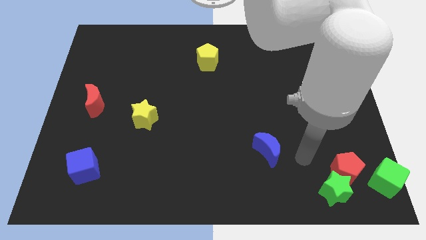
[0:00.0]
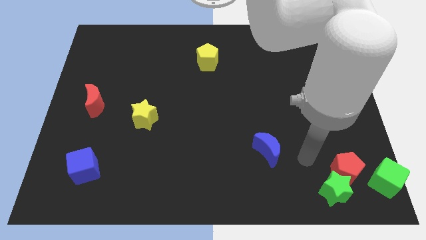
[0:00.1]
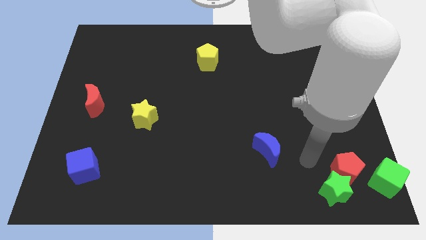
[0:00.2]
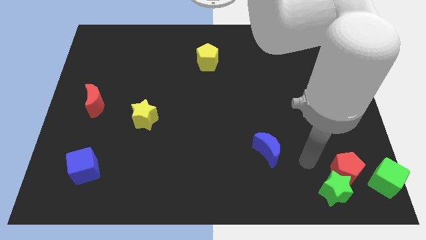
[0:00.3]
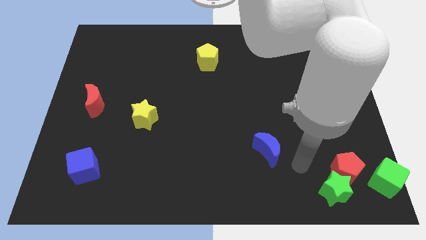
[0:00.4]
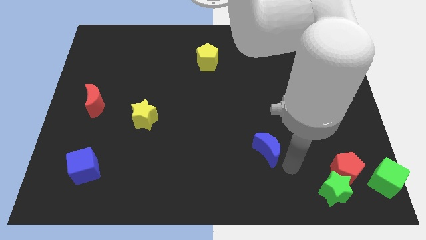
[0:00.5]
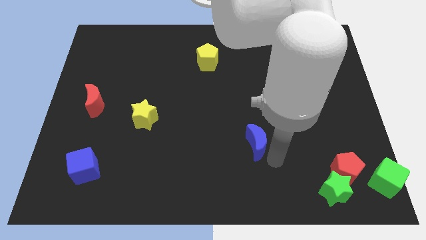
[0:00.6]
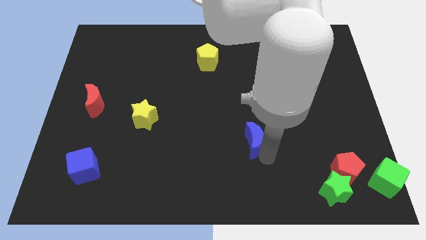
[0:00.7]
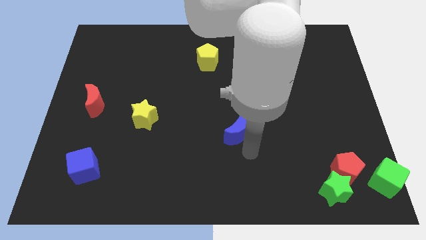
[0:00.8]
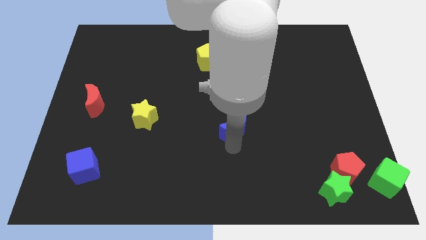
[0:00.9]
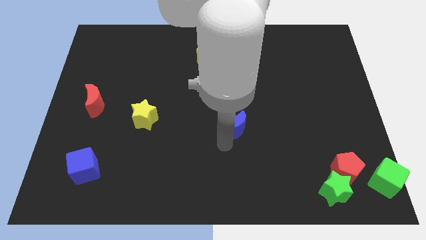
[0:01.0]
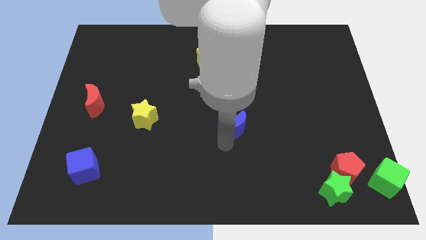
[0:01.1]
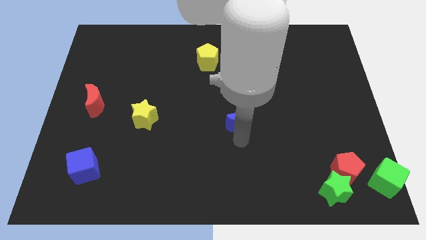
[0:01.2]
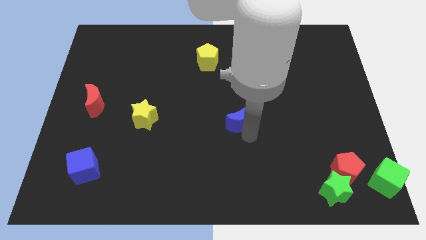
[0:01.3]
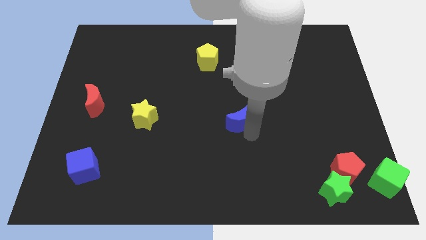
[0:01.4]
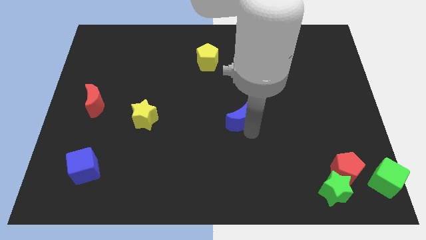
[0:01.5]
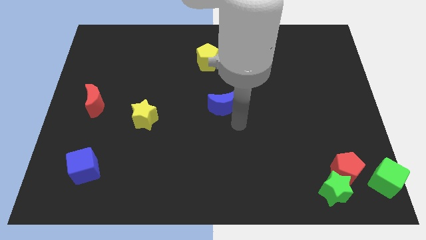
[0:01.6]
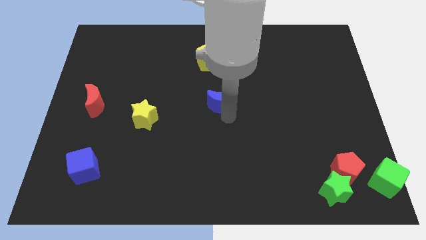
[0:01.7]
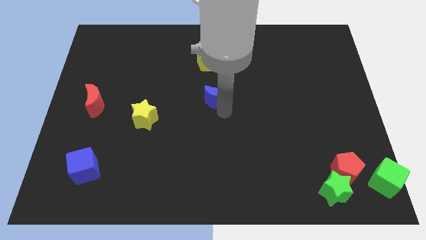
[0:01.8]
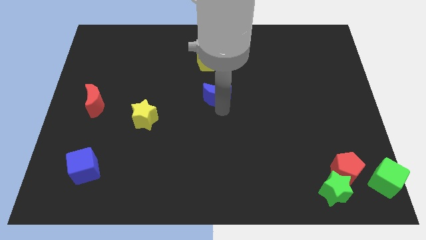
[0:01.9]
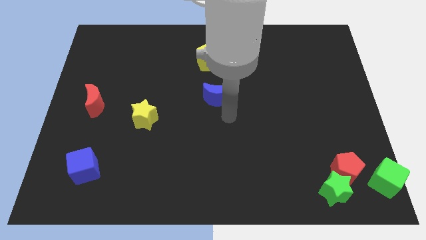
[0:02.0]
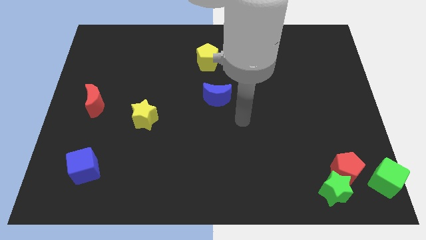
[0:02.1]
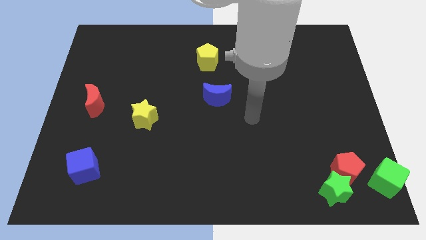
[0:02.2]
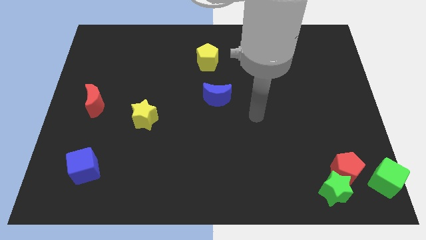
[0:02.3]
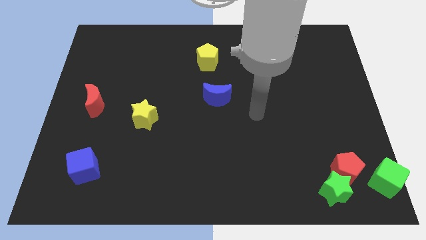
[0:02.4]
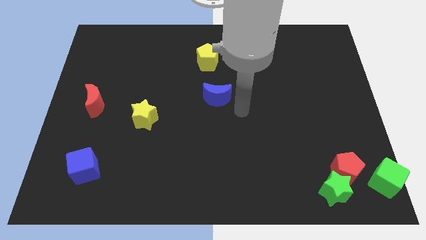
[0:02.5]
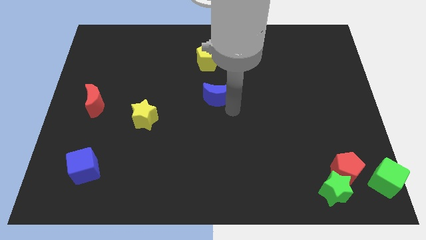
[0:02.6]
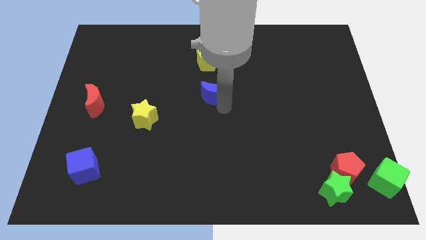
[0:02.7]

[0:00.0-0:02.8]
place the blue moon below the yellow pentagon

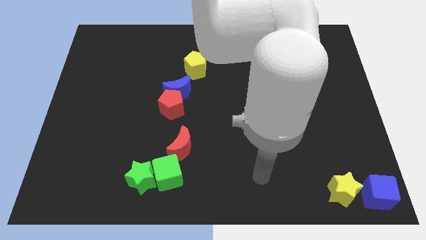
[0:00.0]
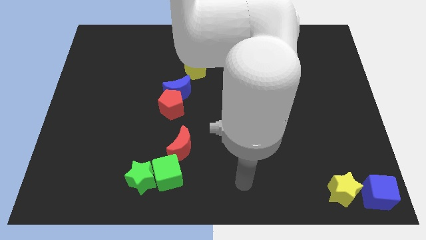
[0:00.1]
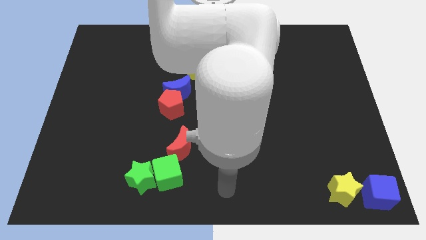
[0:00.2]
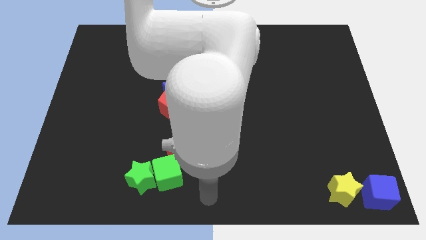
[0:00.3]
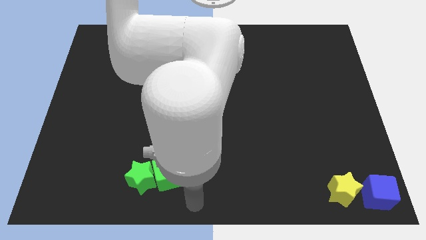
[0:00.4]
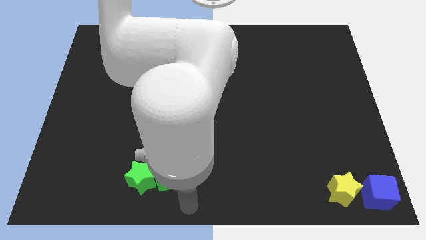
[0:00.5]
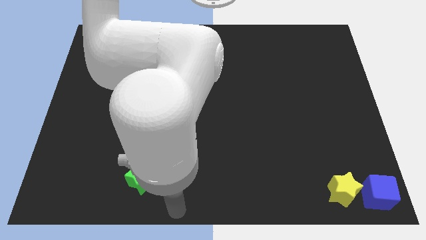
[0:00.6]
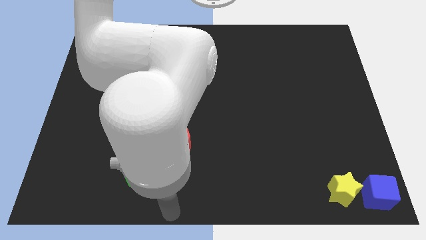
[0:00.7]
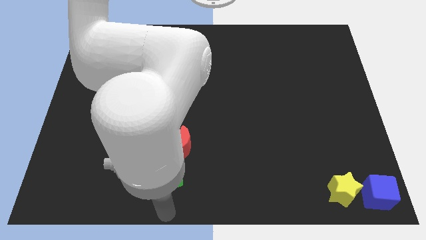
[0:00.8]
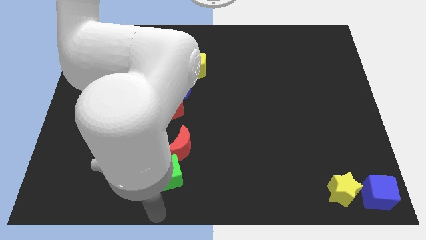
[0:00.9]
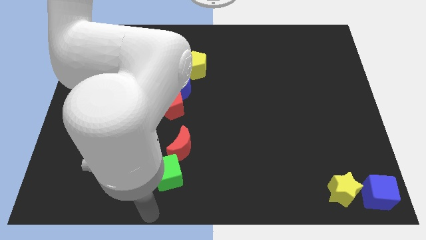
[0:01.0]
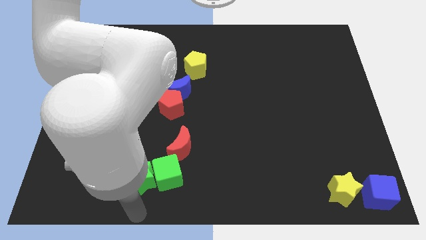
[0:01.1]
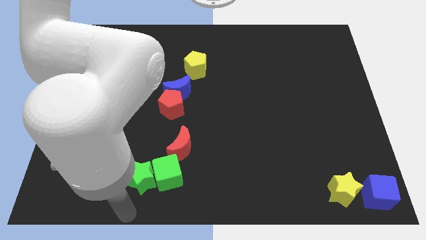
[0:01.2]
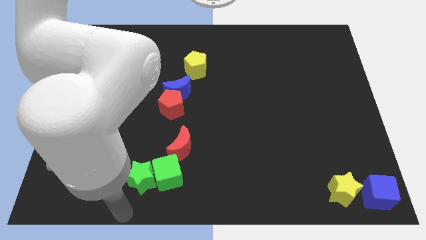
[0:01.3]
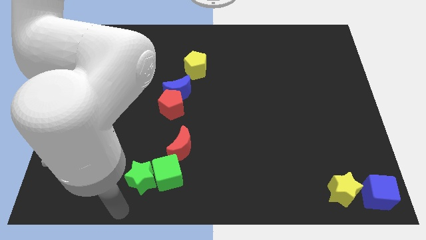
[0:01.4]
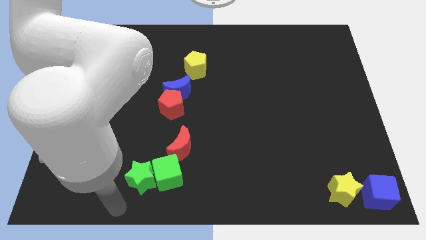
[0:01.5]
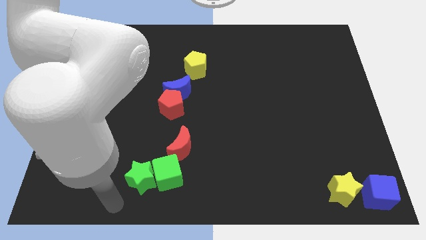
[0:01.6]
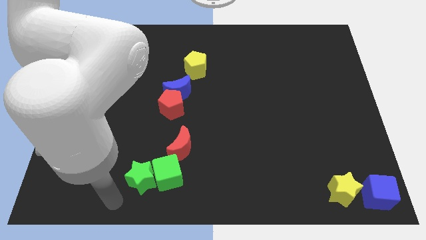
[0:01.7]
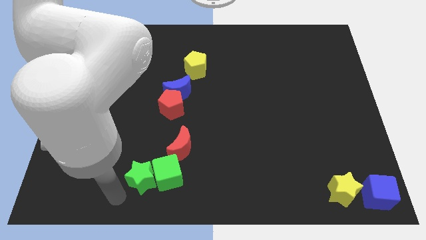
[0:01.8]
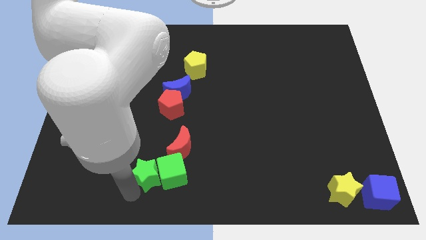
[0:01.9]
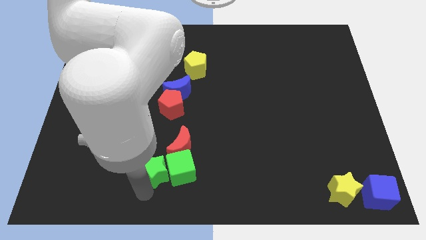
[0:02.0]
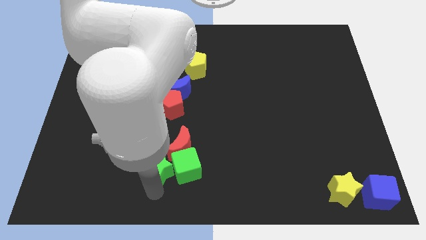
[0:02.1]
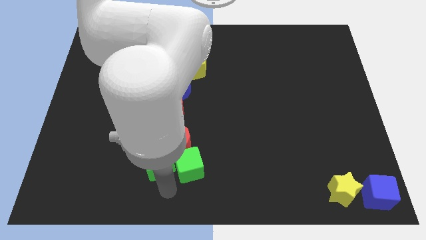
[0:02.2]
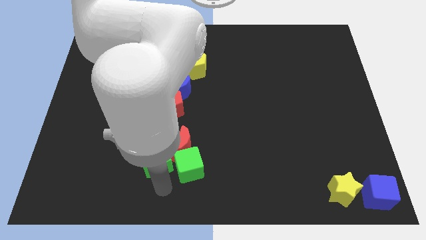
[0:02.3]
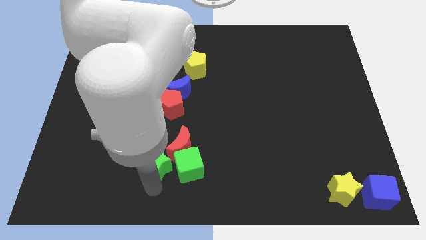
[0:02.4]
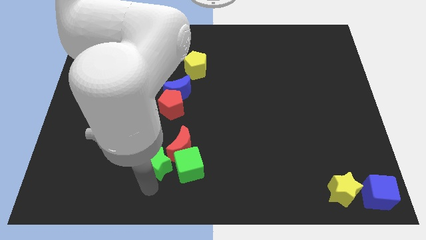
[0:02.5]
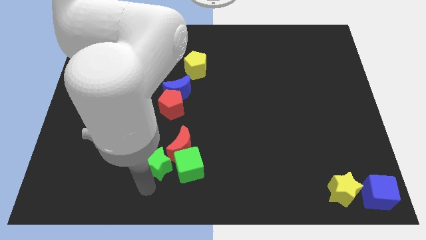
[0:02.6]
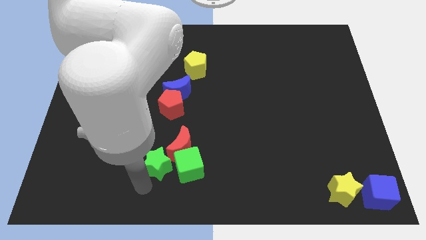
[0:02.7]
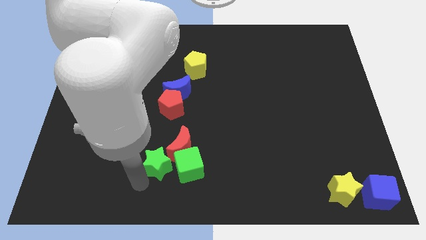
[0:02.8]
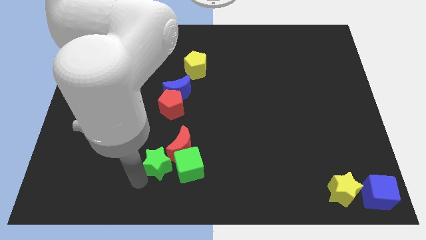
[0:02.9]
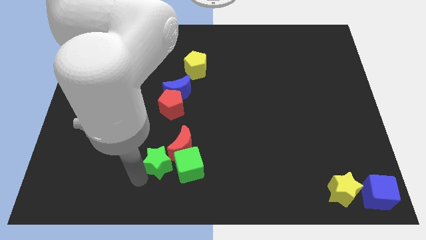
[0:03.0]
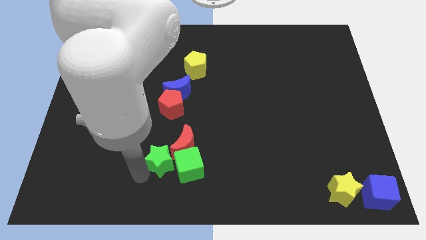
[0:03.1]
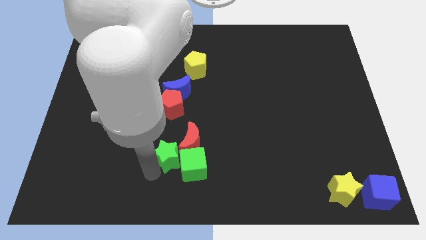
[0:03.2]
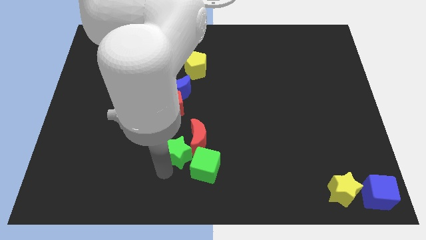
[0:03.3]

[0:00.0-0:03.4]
push the green star into the red moon

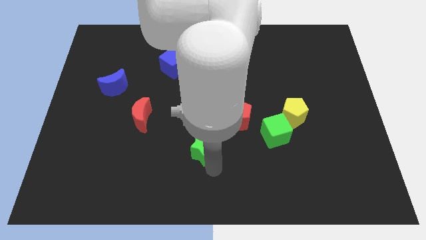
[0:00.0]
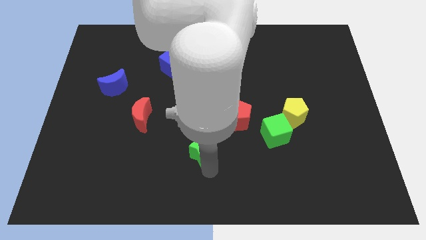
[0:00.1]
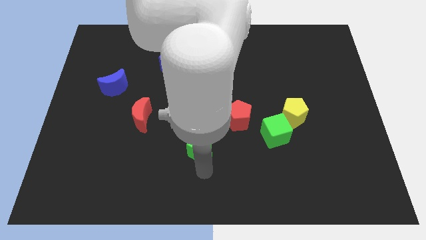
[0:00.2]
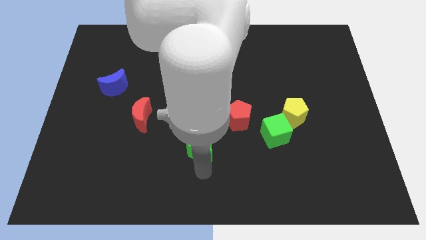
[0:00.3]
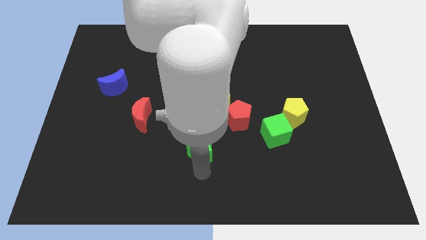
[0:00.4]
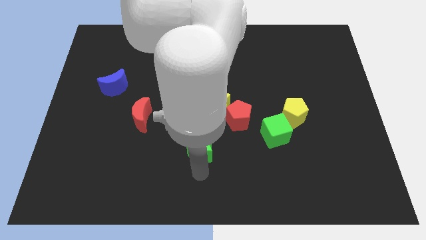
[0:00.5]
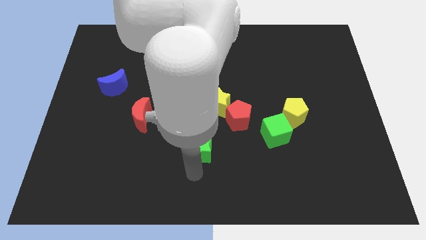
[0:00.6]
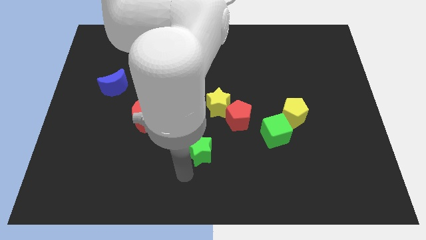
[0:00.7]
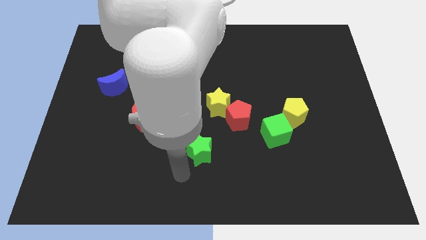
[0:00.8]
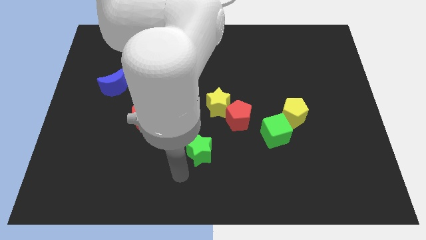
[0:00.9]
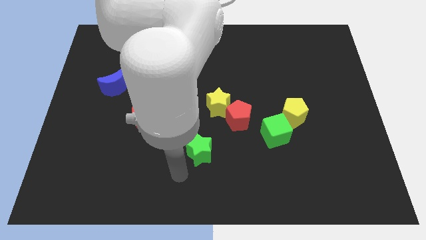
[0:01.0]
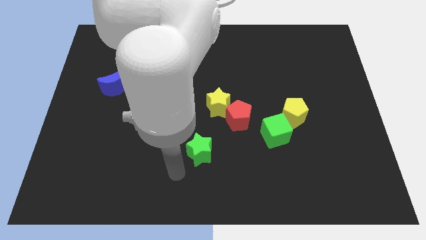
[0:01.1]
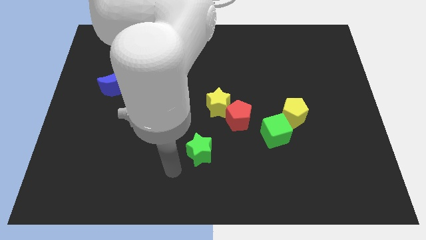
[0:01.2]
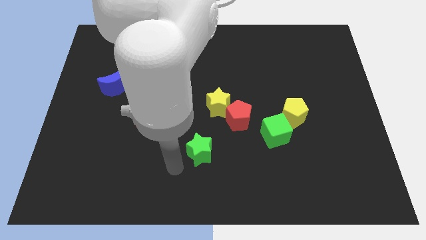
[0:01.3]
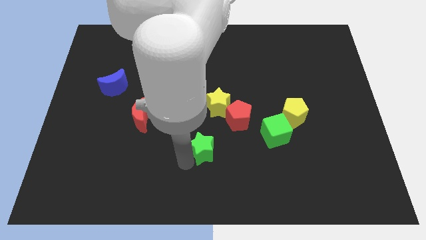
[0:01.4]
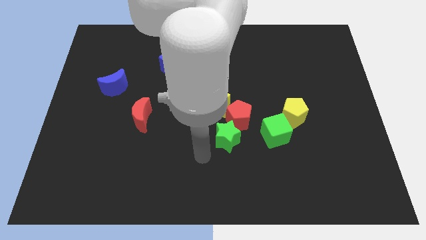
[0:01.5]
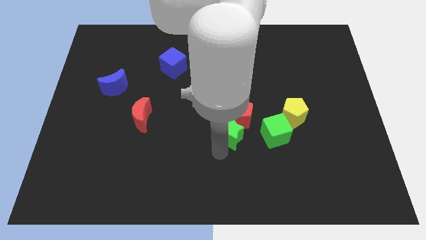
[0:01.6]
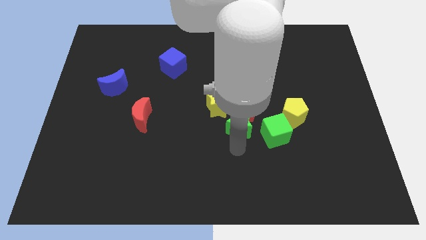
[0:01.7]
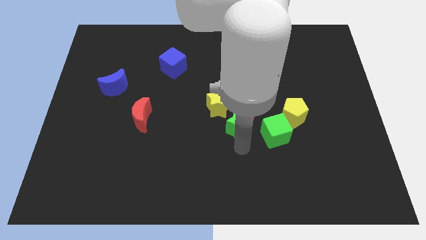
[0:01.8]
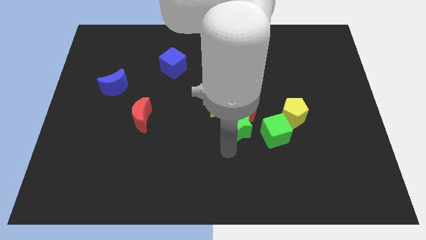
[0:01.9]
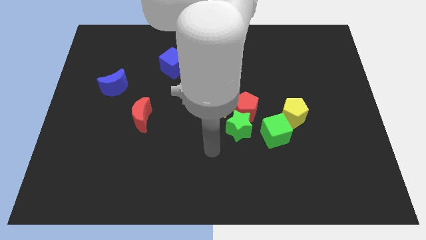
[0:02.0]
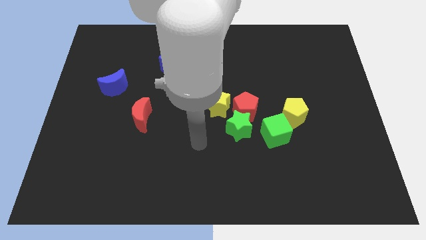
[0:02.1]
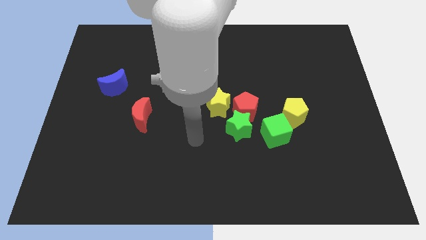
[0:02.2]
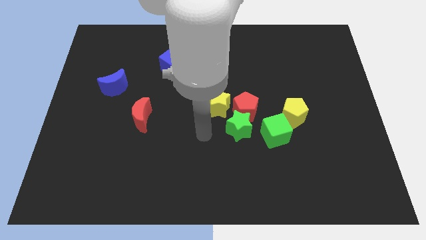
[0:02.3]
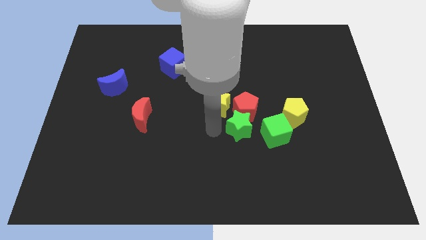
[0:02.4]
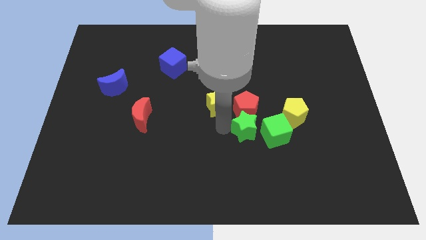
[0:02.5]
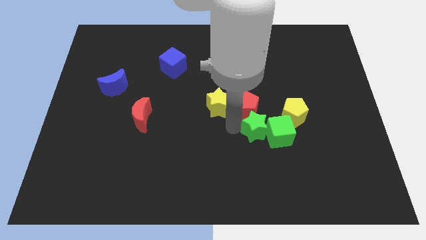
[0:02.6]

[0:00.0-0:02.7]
move the green star into the red pentagon
